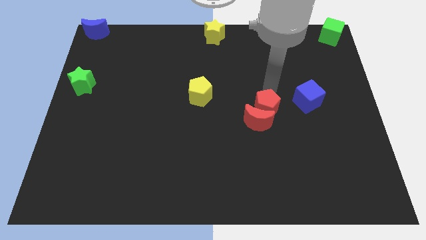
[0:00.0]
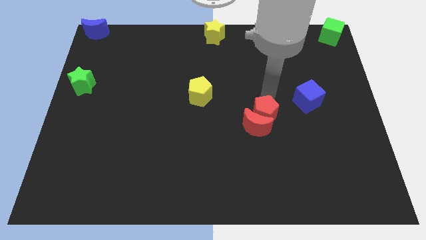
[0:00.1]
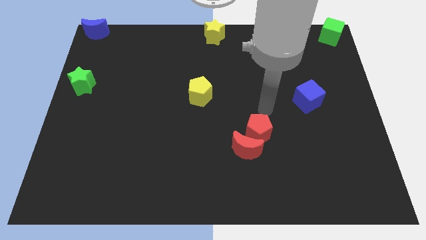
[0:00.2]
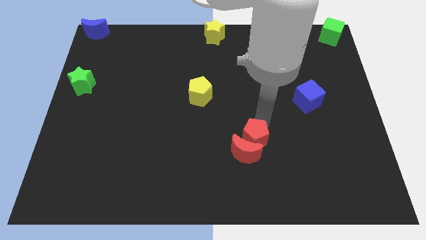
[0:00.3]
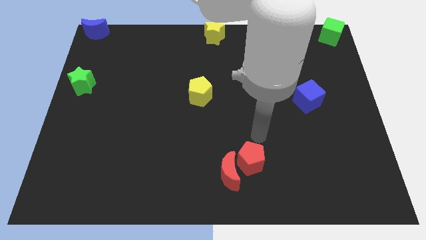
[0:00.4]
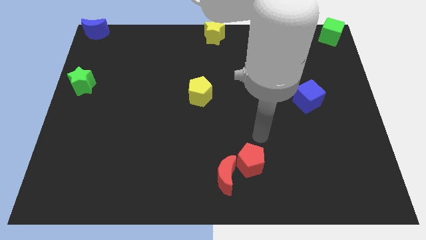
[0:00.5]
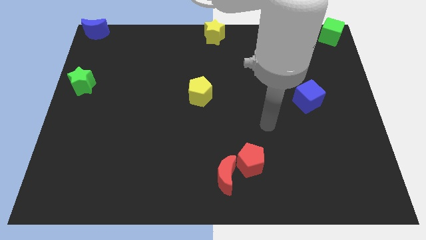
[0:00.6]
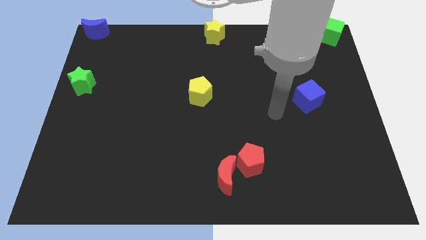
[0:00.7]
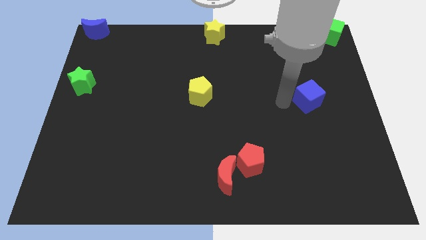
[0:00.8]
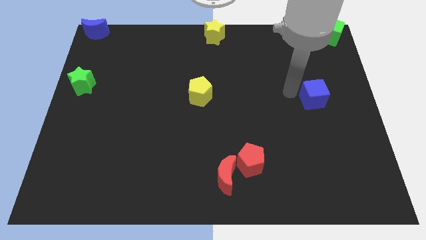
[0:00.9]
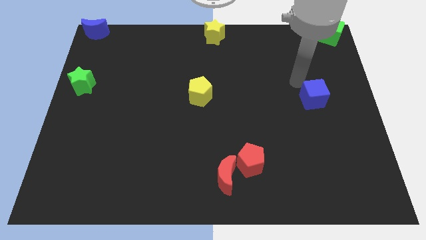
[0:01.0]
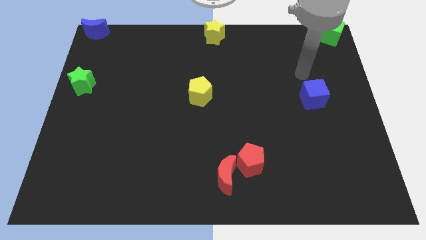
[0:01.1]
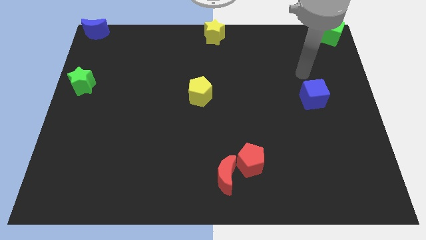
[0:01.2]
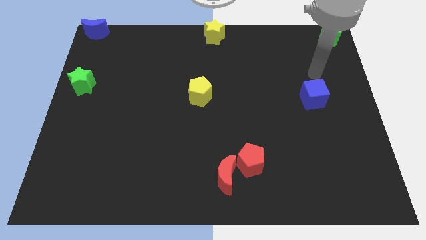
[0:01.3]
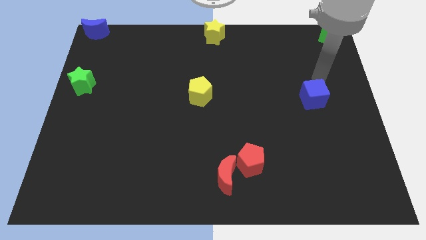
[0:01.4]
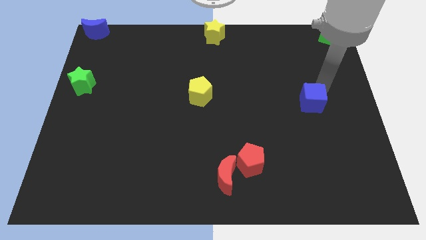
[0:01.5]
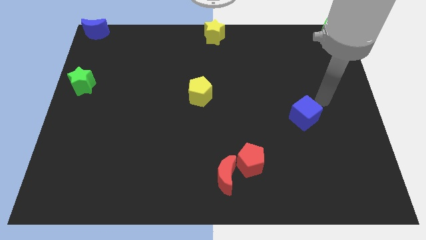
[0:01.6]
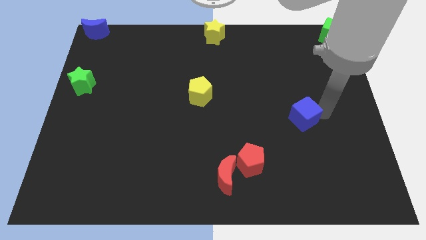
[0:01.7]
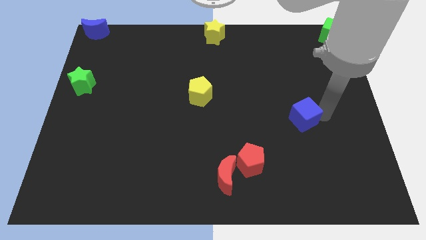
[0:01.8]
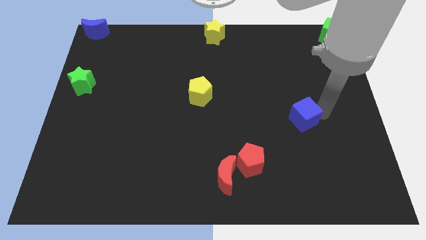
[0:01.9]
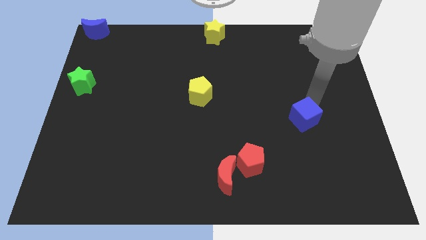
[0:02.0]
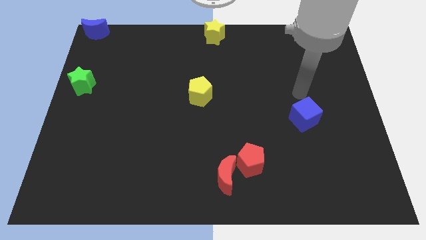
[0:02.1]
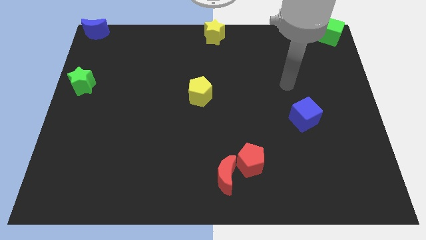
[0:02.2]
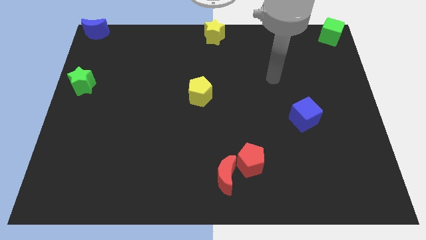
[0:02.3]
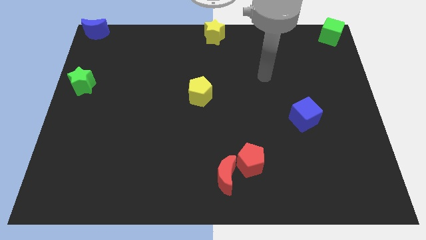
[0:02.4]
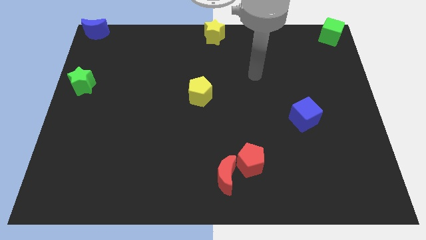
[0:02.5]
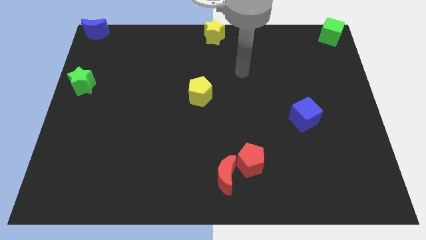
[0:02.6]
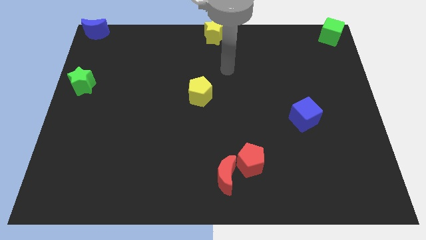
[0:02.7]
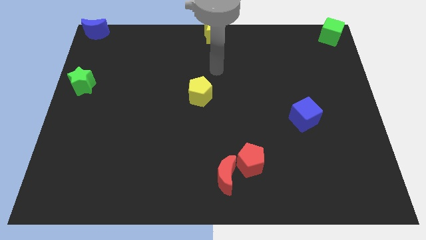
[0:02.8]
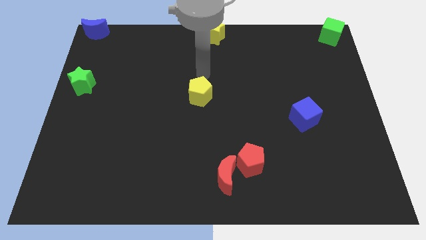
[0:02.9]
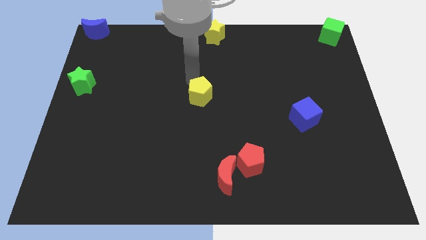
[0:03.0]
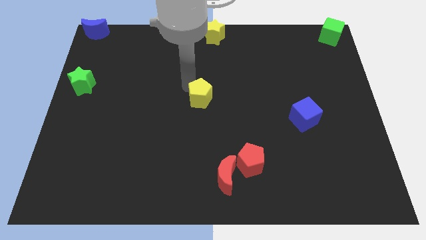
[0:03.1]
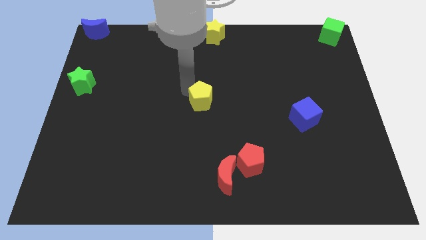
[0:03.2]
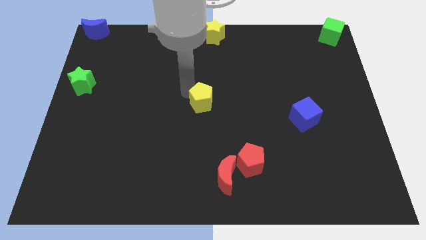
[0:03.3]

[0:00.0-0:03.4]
slightly push the blue cube down

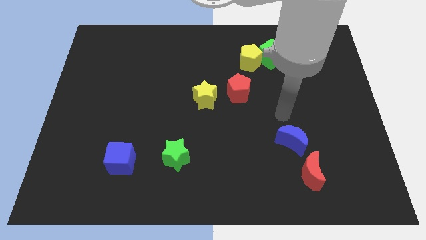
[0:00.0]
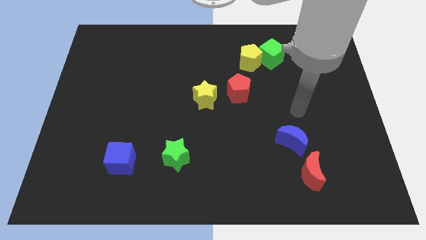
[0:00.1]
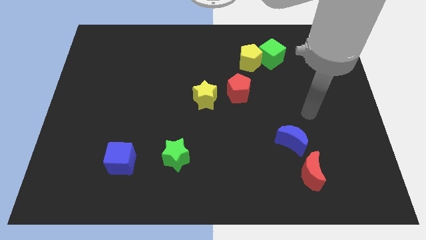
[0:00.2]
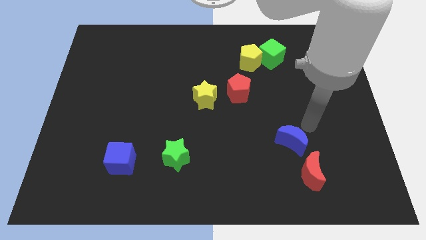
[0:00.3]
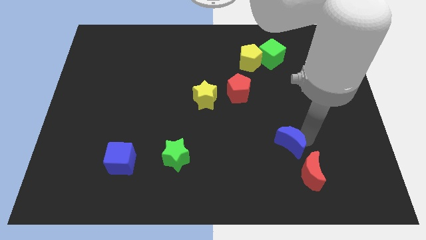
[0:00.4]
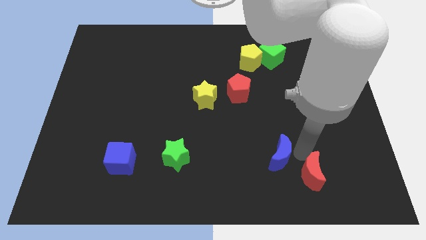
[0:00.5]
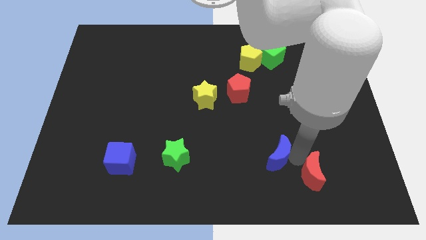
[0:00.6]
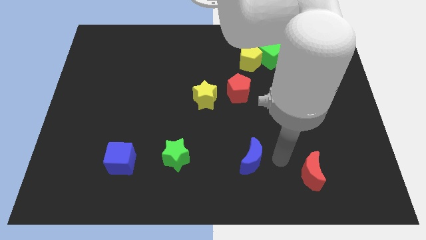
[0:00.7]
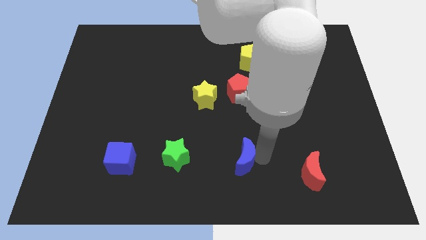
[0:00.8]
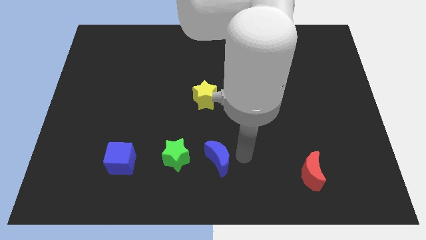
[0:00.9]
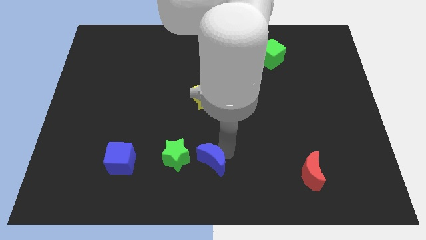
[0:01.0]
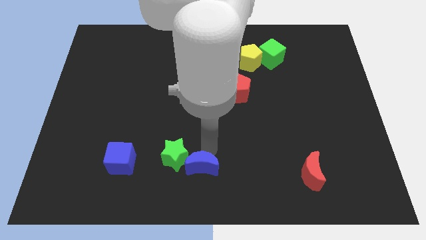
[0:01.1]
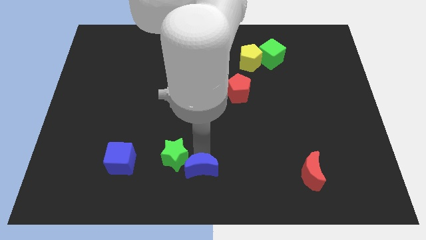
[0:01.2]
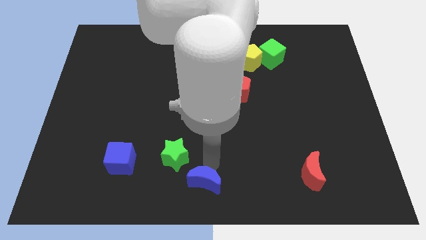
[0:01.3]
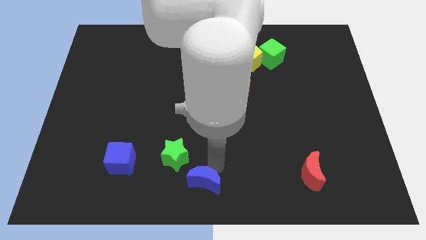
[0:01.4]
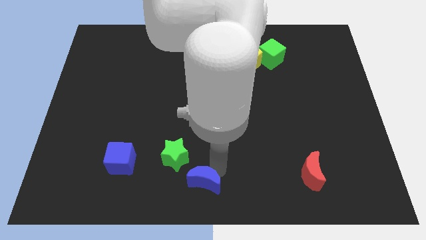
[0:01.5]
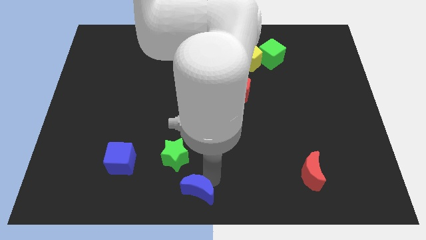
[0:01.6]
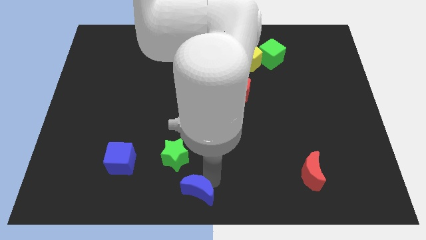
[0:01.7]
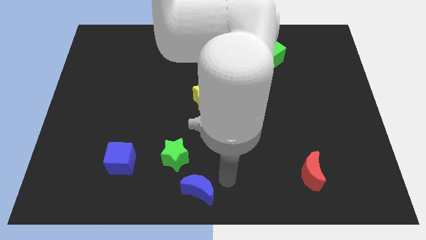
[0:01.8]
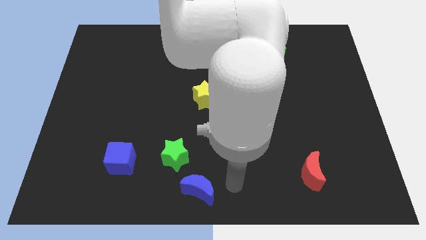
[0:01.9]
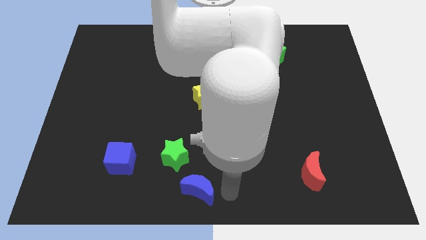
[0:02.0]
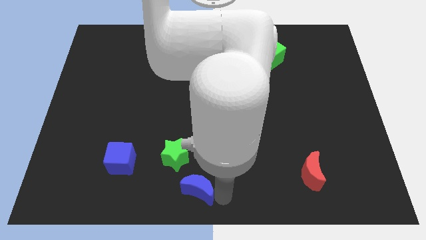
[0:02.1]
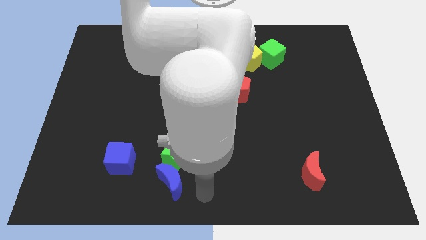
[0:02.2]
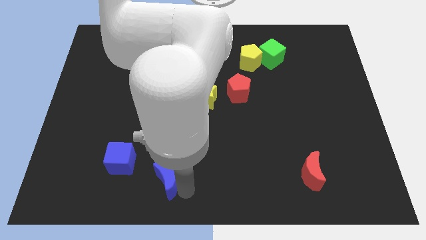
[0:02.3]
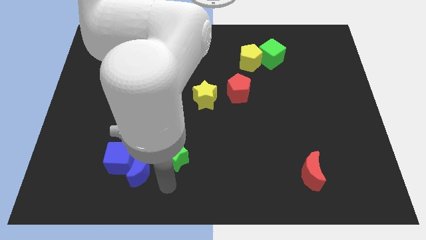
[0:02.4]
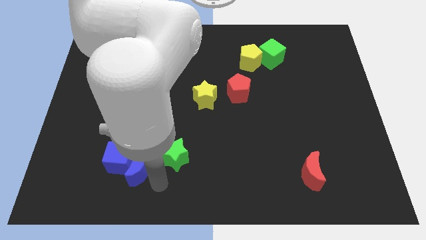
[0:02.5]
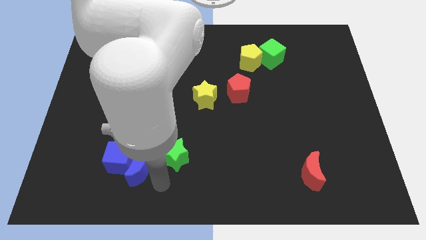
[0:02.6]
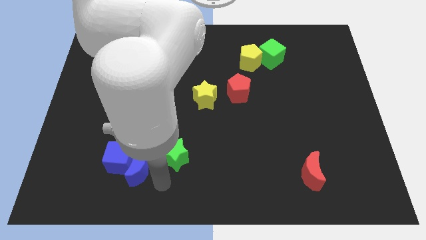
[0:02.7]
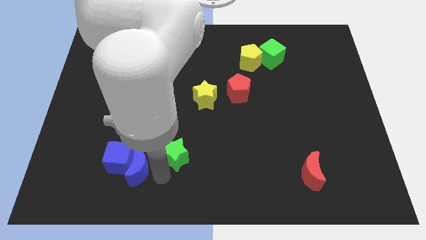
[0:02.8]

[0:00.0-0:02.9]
push blue crescent towards blue cube

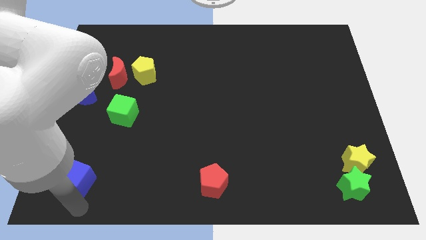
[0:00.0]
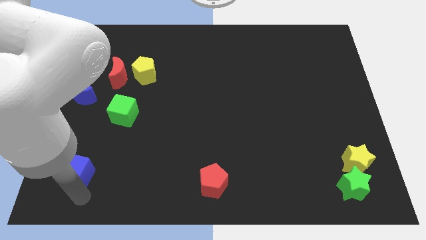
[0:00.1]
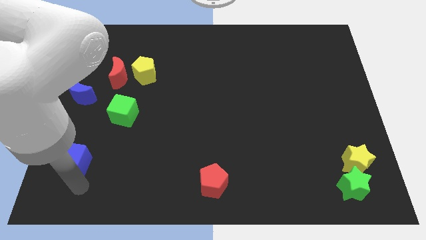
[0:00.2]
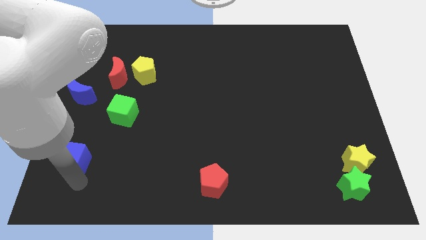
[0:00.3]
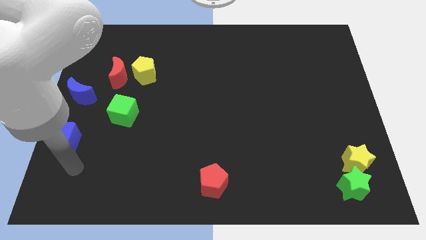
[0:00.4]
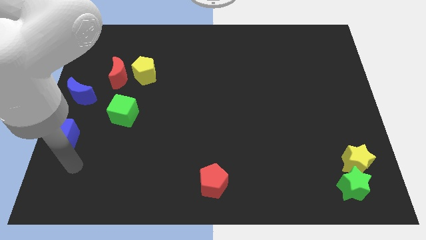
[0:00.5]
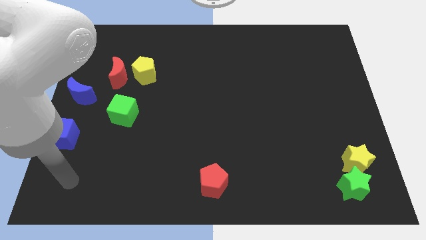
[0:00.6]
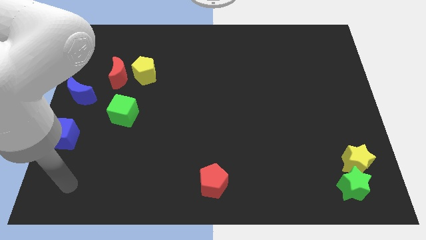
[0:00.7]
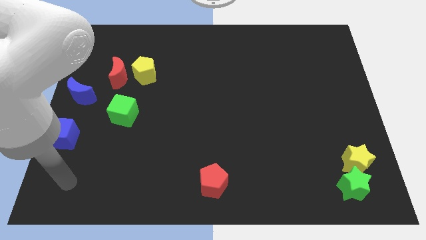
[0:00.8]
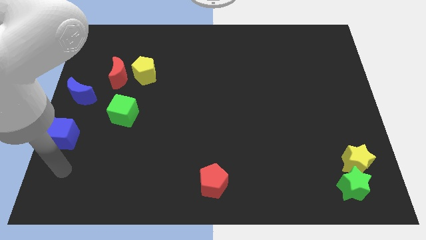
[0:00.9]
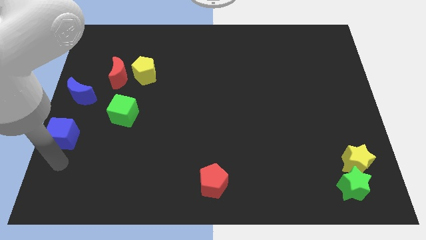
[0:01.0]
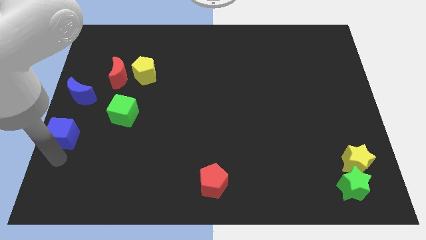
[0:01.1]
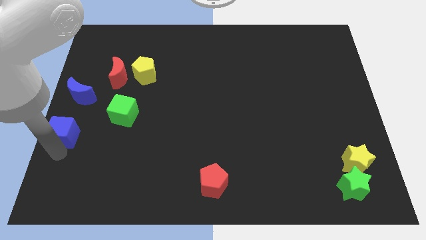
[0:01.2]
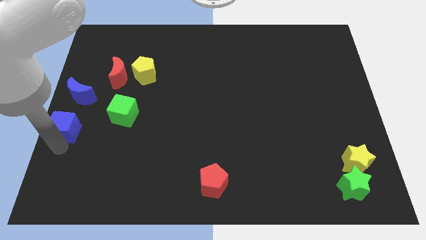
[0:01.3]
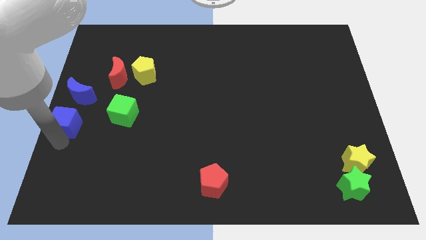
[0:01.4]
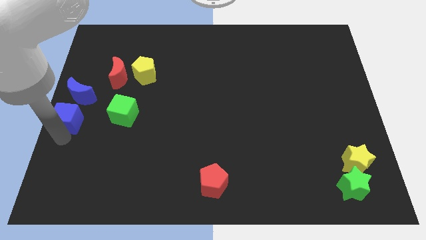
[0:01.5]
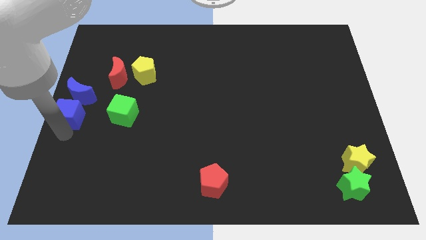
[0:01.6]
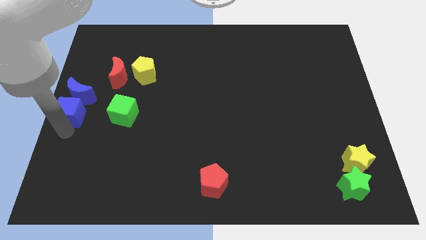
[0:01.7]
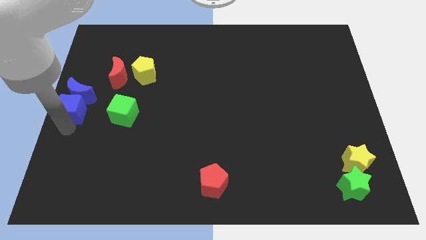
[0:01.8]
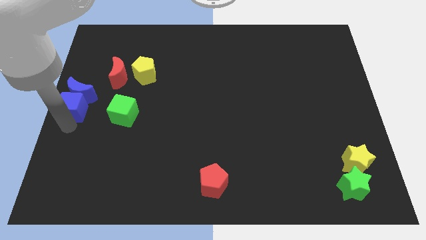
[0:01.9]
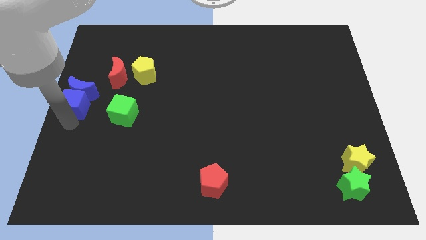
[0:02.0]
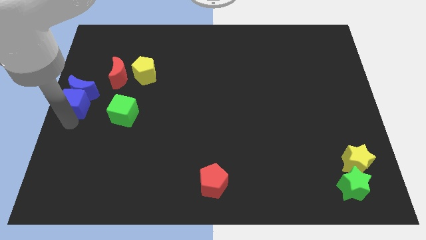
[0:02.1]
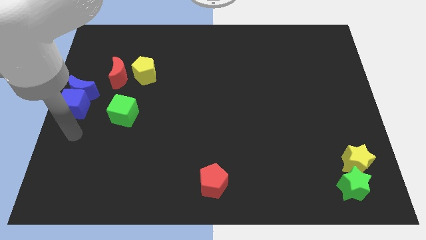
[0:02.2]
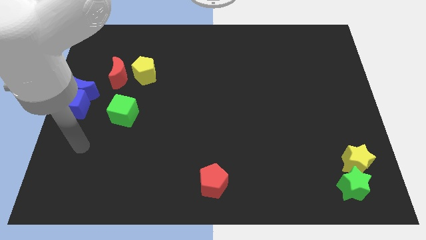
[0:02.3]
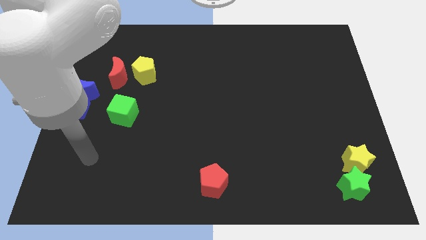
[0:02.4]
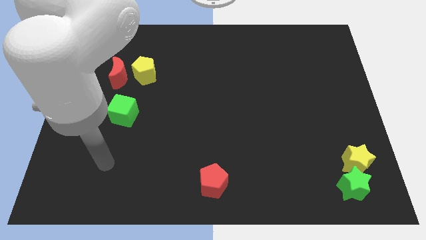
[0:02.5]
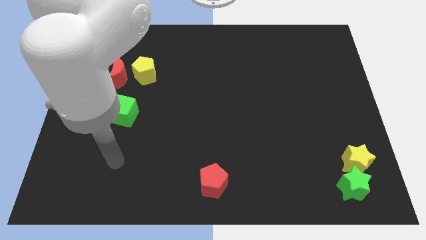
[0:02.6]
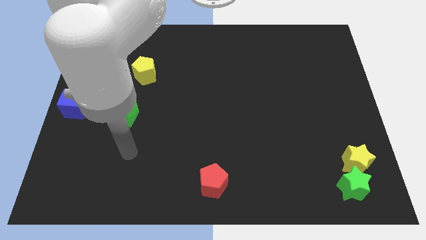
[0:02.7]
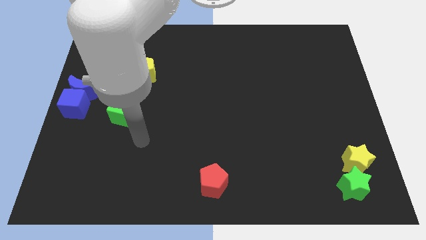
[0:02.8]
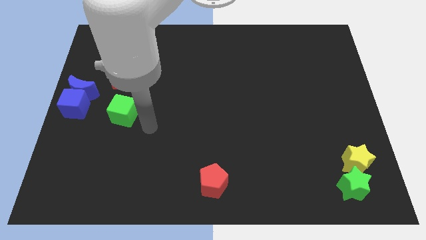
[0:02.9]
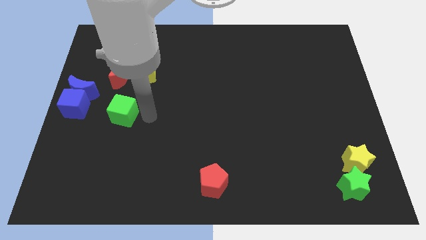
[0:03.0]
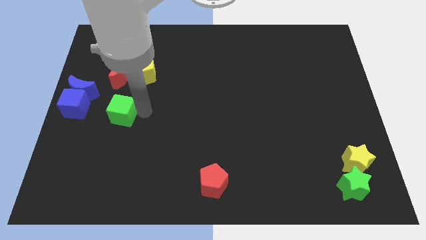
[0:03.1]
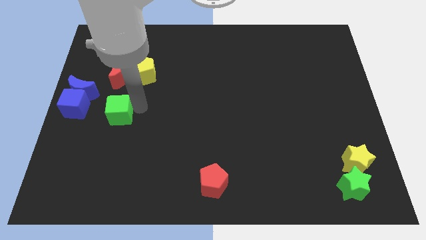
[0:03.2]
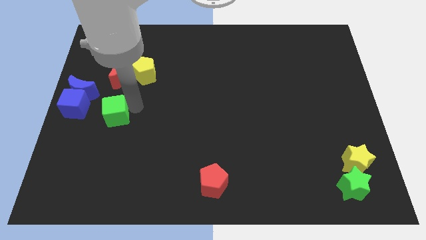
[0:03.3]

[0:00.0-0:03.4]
move the blue cube upwards along with blue crescent
